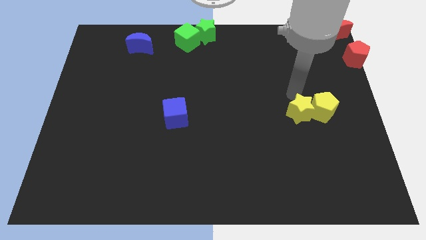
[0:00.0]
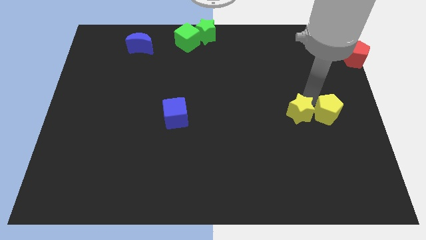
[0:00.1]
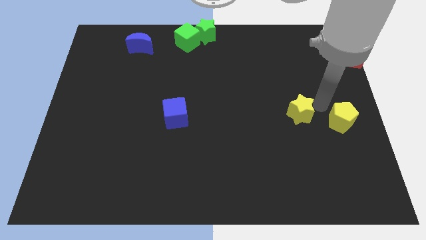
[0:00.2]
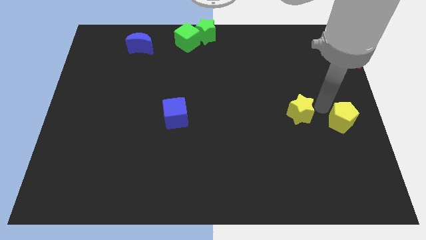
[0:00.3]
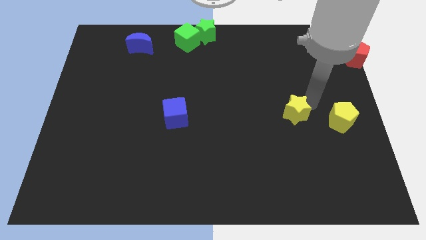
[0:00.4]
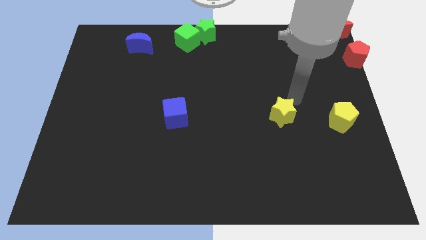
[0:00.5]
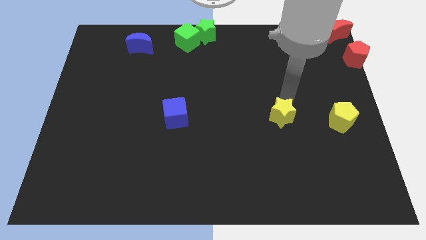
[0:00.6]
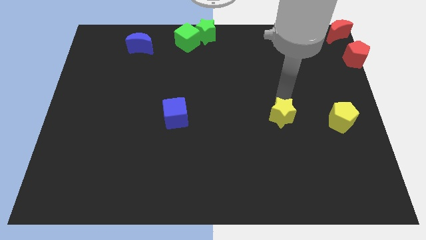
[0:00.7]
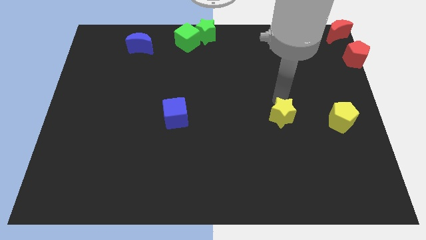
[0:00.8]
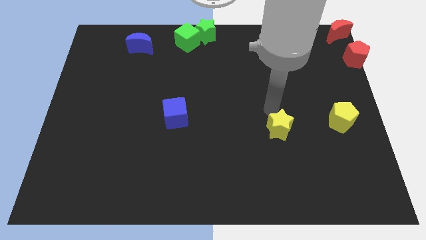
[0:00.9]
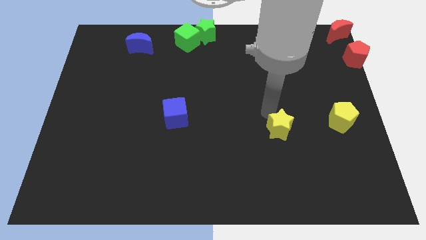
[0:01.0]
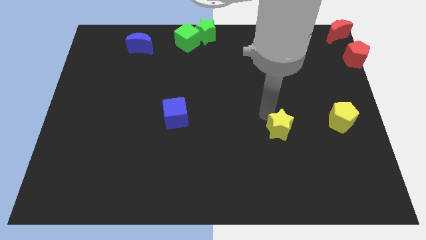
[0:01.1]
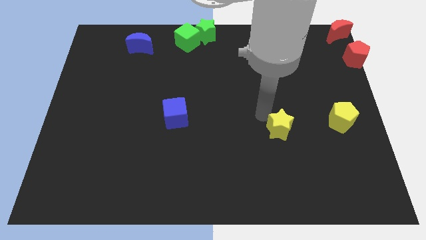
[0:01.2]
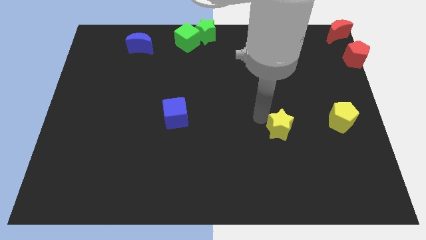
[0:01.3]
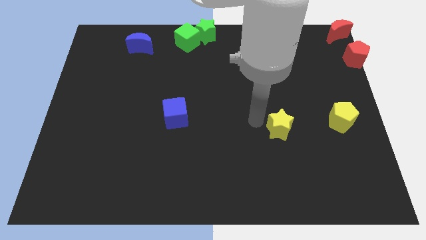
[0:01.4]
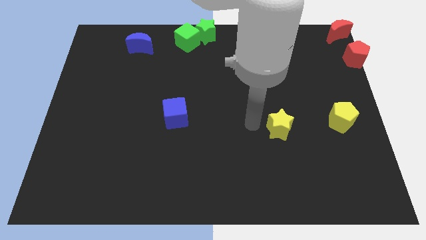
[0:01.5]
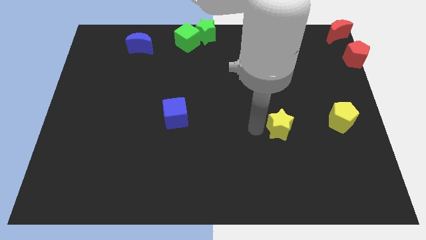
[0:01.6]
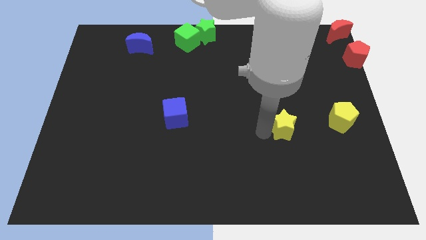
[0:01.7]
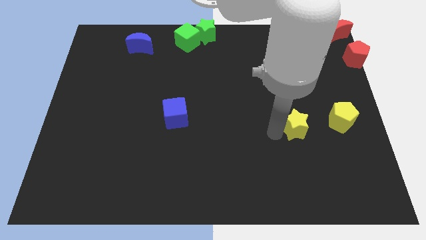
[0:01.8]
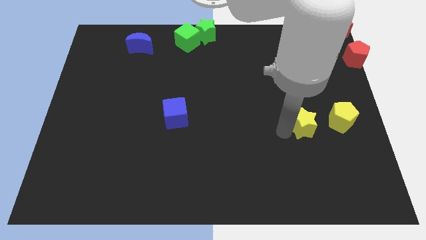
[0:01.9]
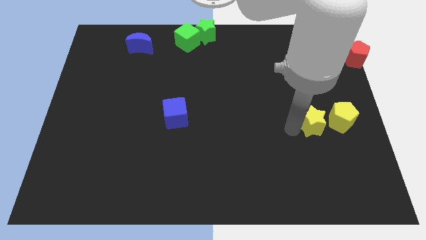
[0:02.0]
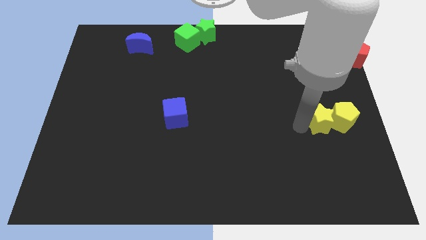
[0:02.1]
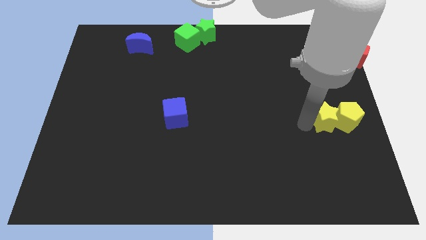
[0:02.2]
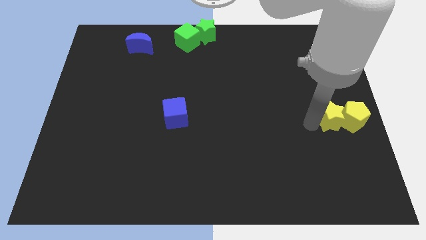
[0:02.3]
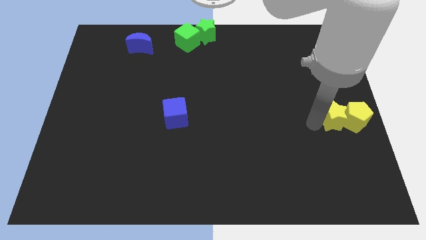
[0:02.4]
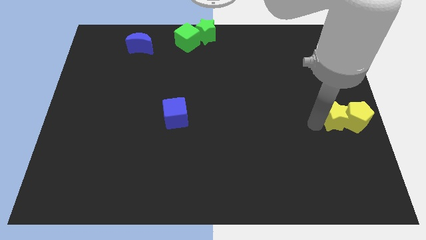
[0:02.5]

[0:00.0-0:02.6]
move the green star and yellow pentagon to the right center

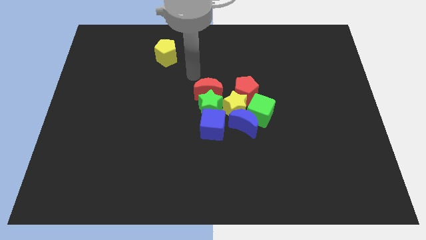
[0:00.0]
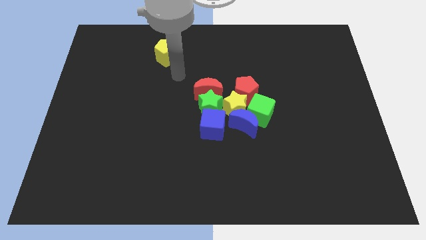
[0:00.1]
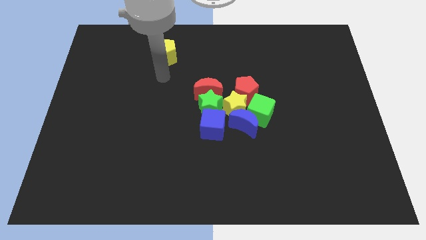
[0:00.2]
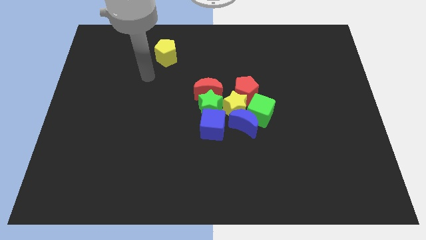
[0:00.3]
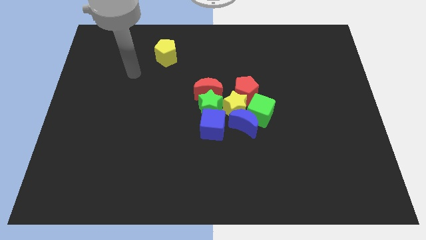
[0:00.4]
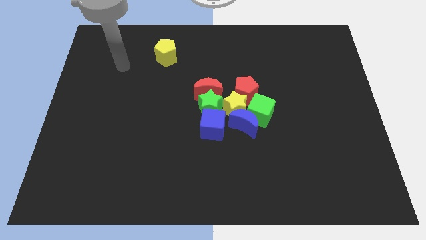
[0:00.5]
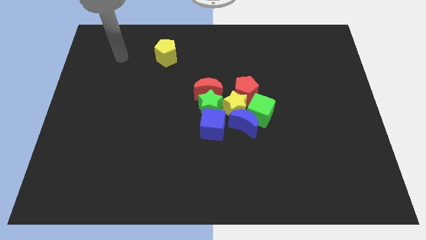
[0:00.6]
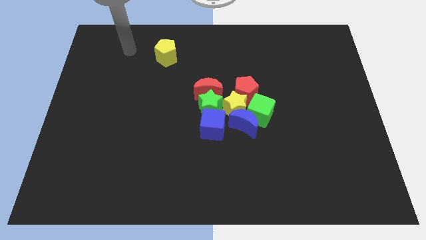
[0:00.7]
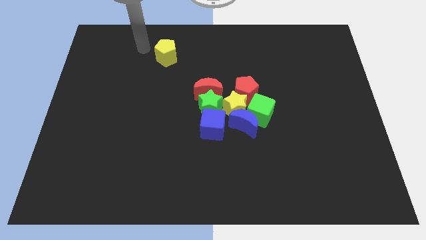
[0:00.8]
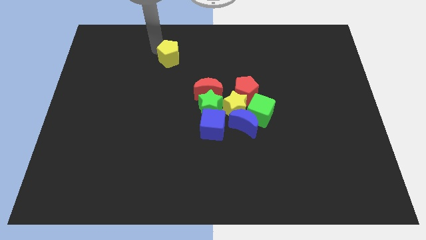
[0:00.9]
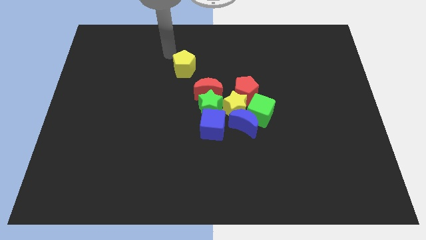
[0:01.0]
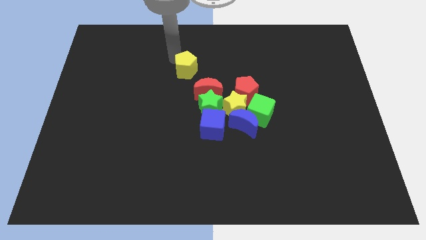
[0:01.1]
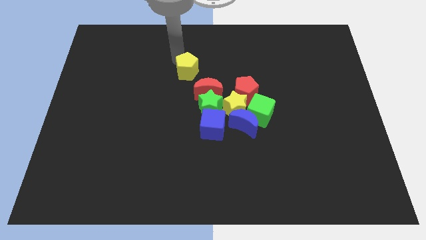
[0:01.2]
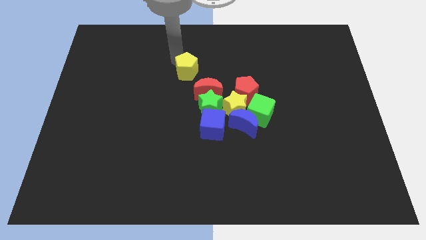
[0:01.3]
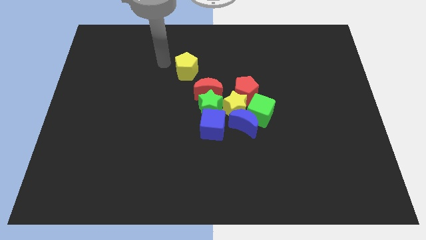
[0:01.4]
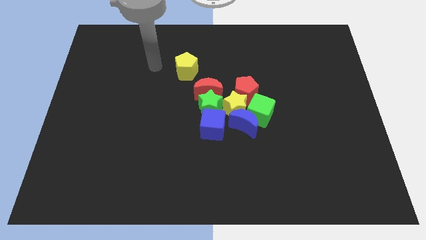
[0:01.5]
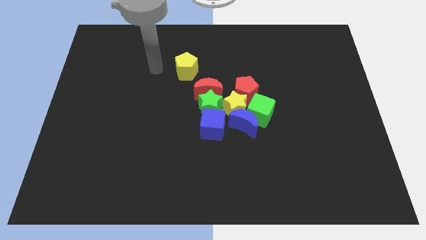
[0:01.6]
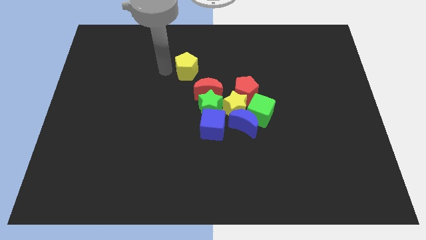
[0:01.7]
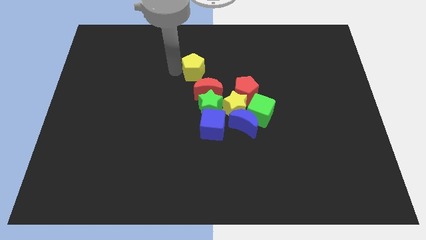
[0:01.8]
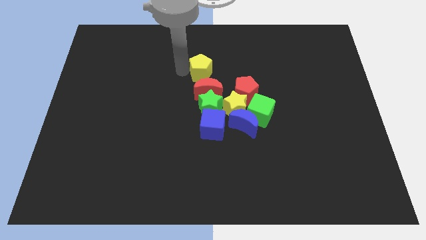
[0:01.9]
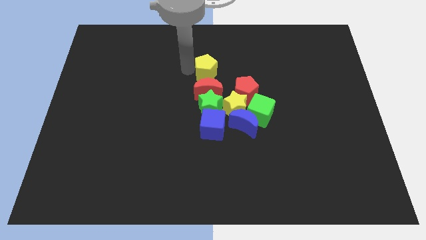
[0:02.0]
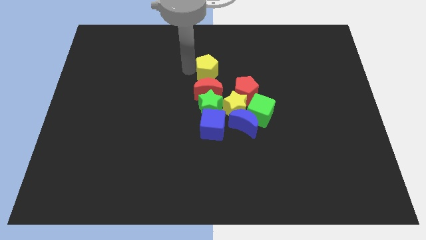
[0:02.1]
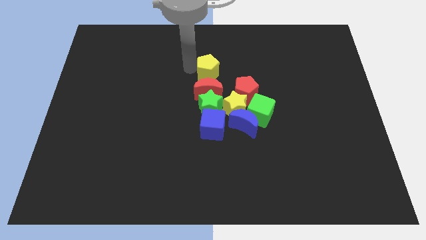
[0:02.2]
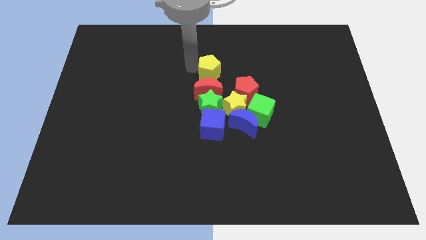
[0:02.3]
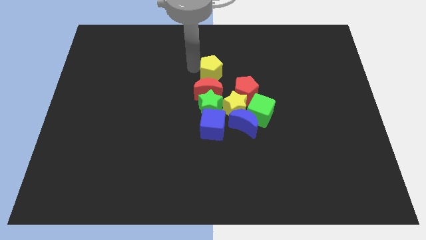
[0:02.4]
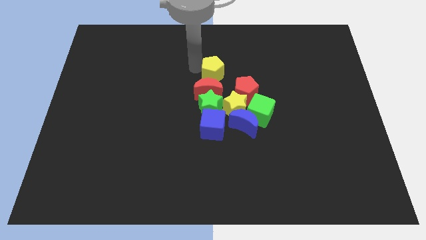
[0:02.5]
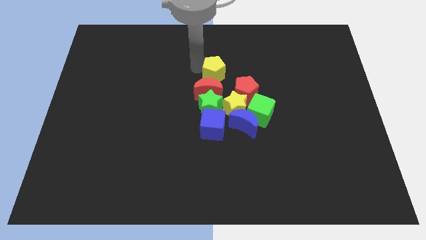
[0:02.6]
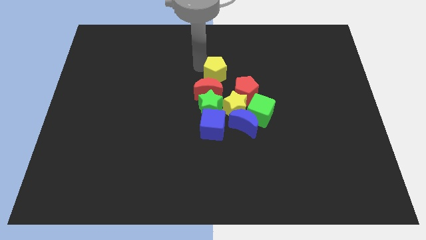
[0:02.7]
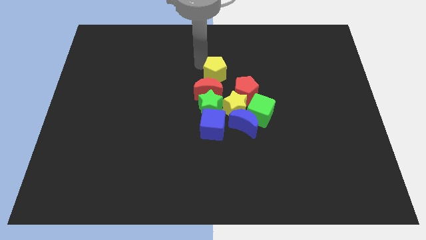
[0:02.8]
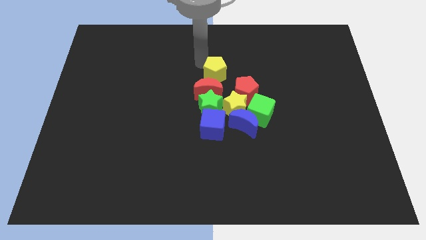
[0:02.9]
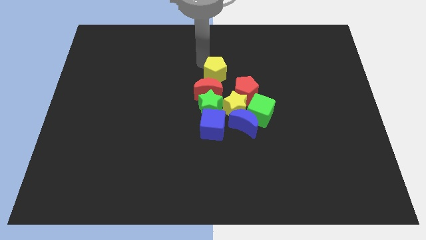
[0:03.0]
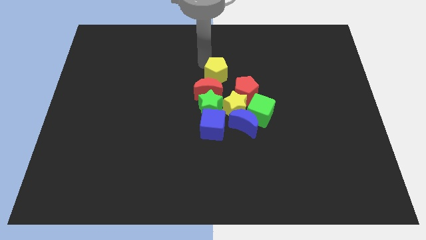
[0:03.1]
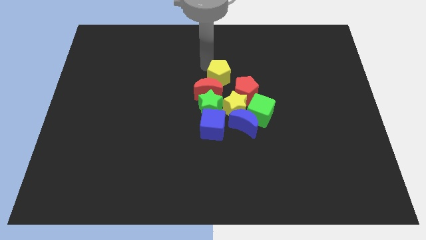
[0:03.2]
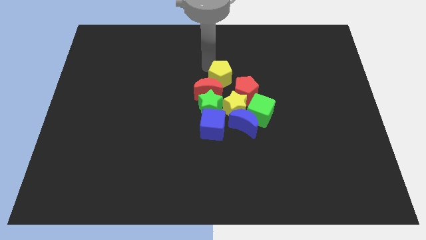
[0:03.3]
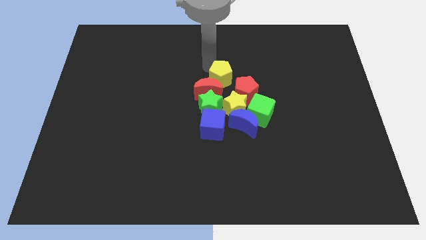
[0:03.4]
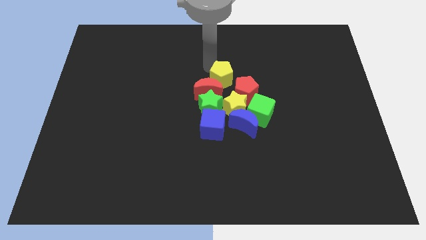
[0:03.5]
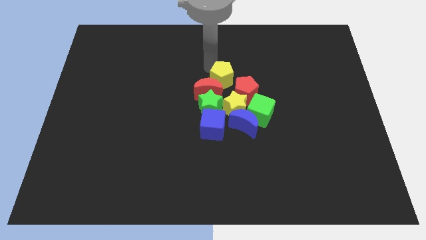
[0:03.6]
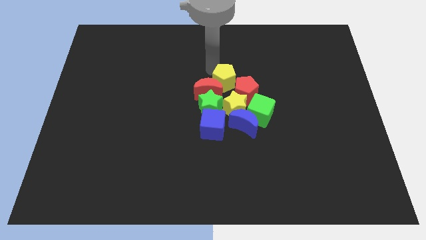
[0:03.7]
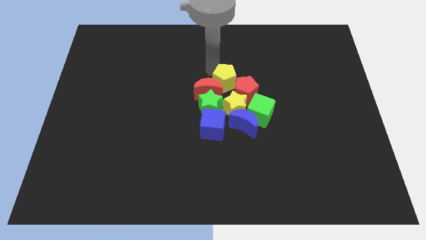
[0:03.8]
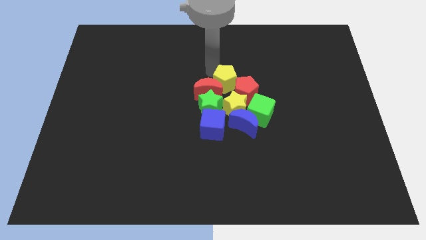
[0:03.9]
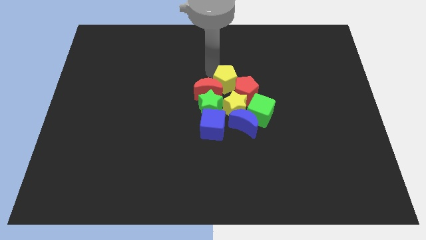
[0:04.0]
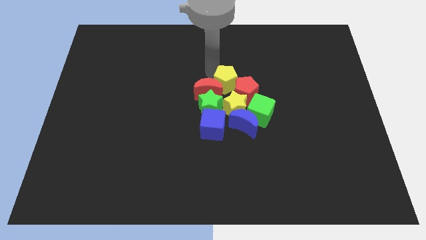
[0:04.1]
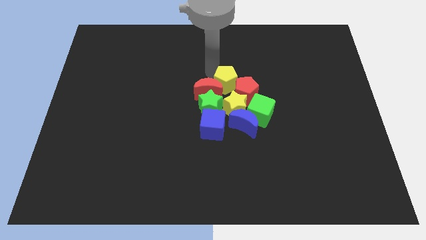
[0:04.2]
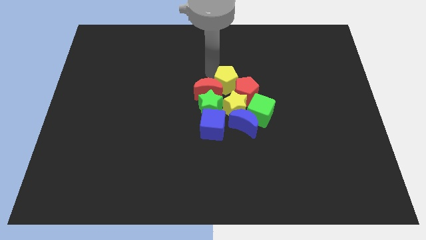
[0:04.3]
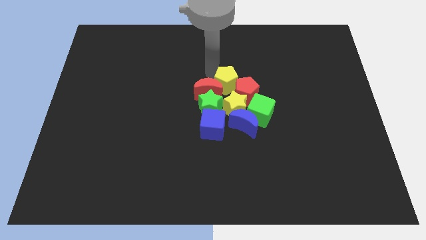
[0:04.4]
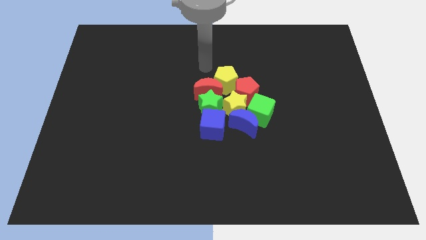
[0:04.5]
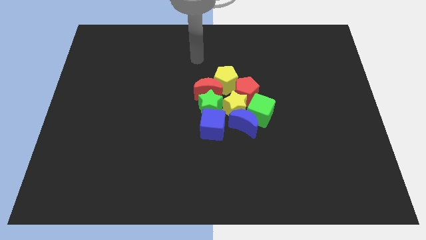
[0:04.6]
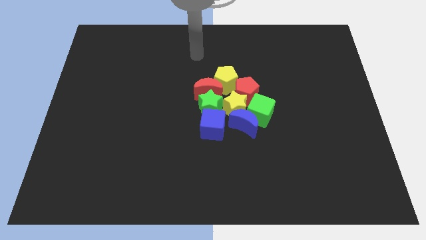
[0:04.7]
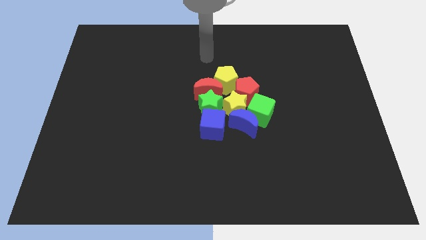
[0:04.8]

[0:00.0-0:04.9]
place the yellow pentagon above to the yellow star

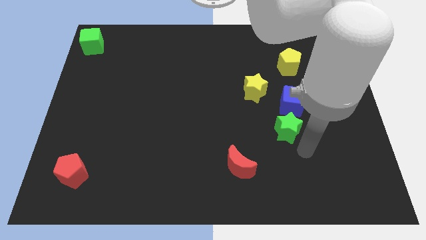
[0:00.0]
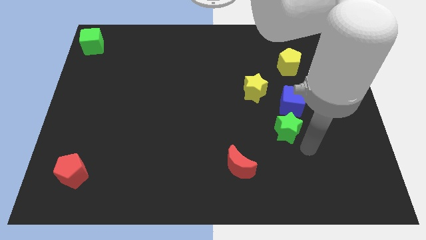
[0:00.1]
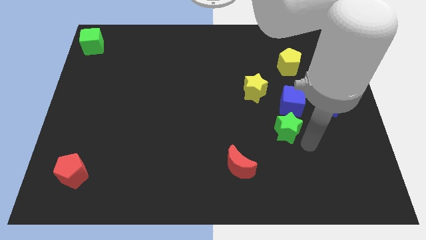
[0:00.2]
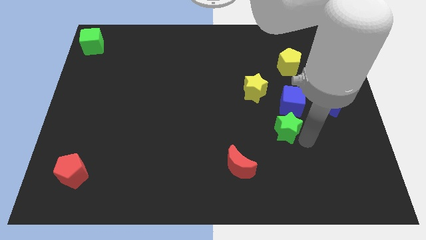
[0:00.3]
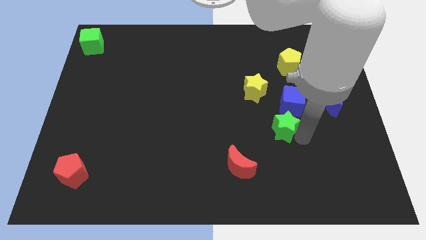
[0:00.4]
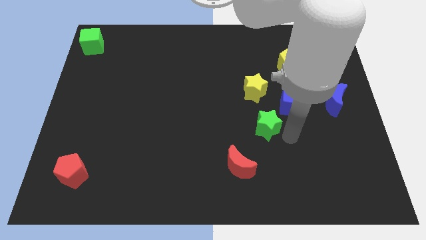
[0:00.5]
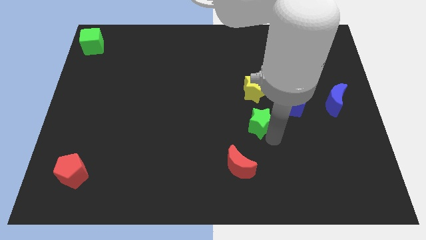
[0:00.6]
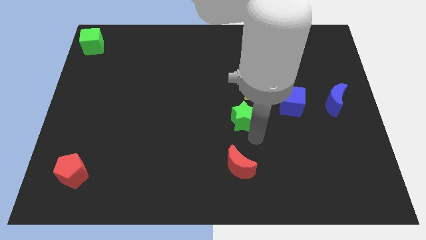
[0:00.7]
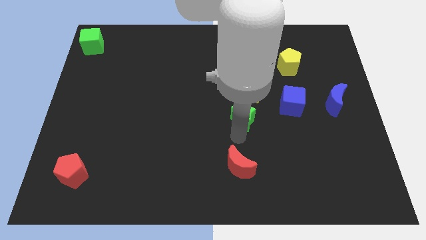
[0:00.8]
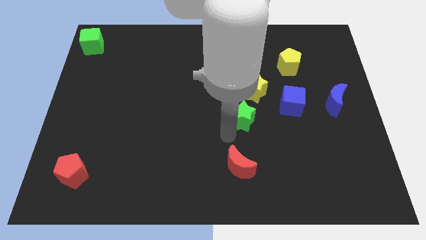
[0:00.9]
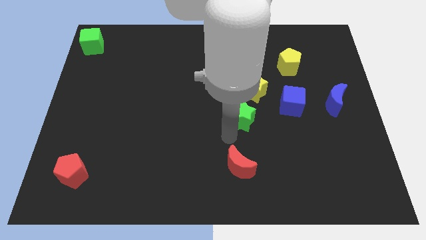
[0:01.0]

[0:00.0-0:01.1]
place green star in between red moon and yellow star

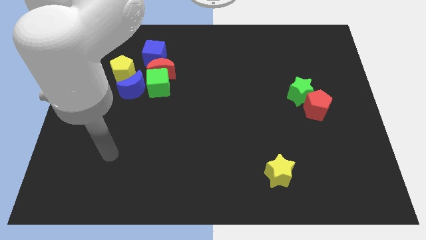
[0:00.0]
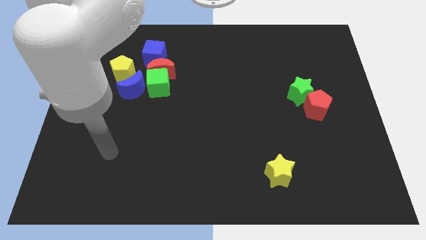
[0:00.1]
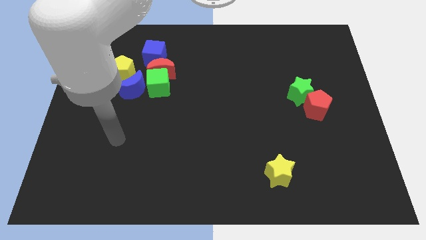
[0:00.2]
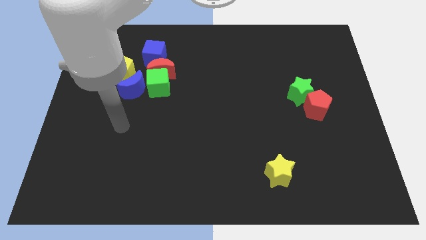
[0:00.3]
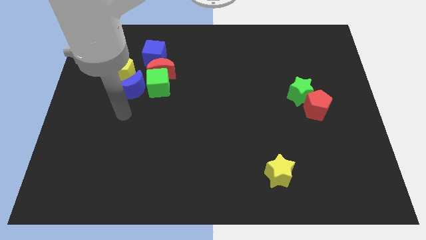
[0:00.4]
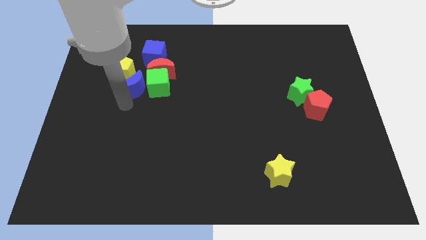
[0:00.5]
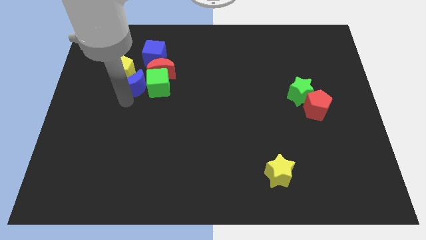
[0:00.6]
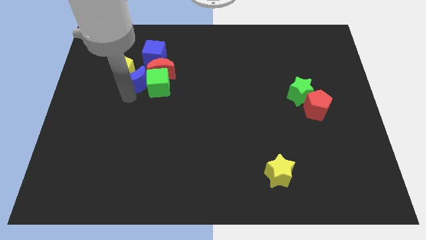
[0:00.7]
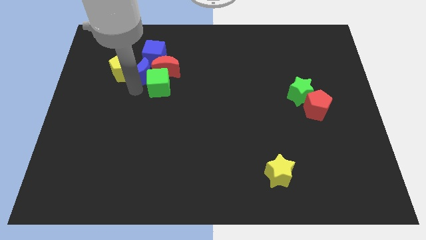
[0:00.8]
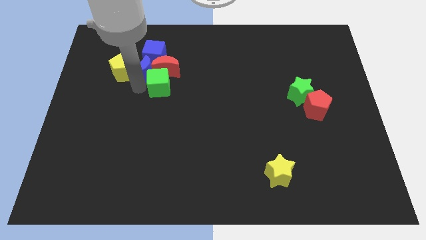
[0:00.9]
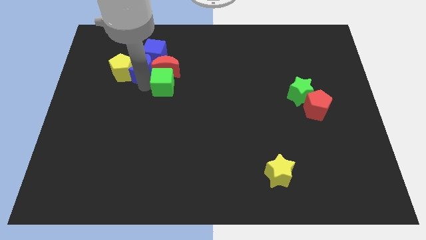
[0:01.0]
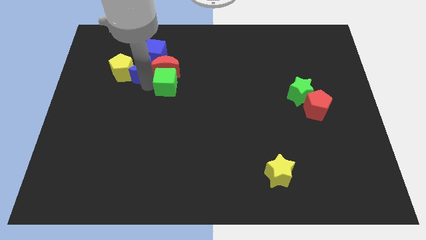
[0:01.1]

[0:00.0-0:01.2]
push the blue crescent into the group of blocks
